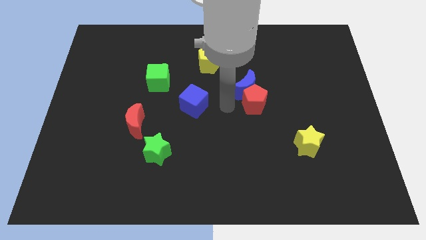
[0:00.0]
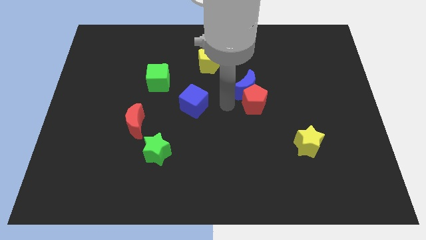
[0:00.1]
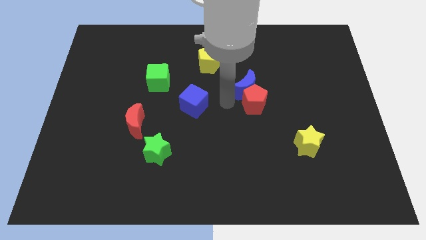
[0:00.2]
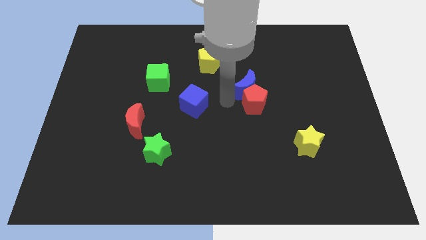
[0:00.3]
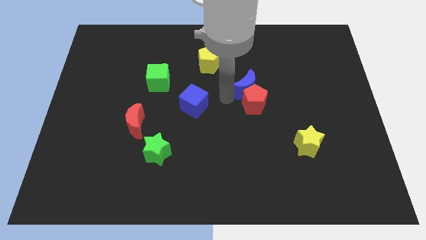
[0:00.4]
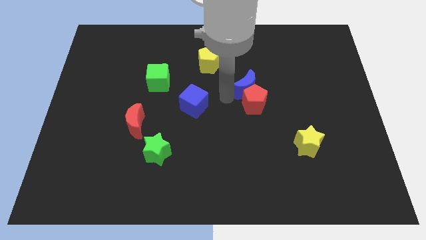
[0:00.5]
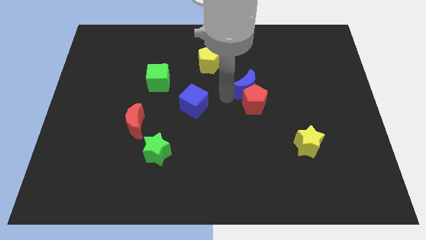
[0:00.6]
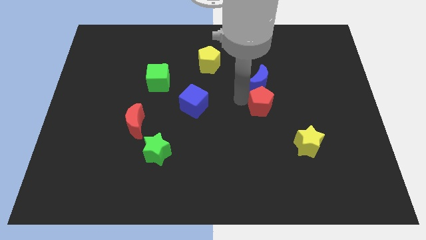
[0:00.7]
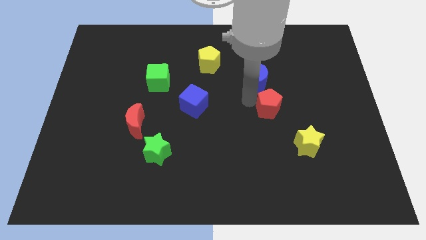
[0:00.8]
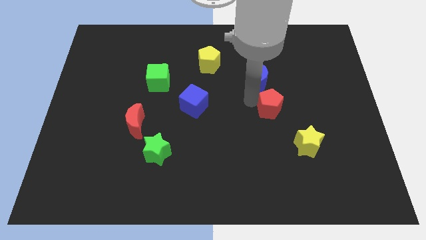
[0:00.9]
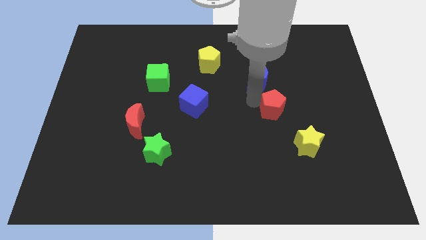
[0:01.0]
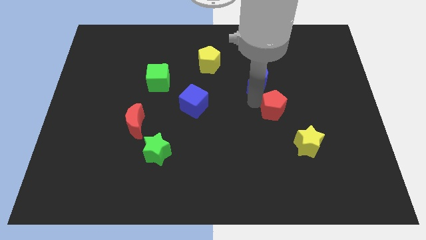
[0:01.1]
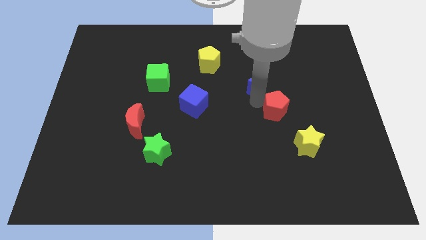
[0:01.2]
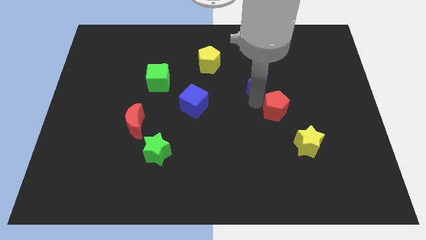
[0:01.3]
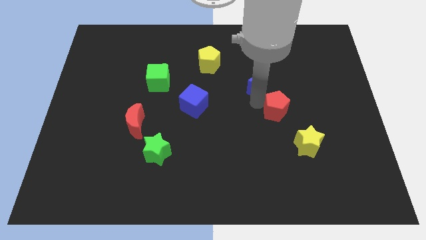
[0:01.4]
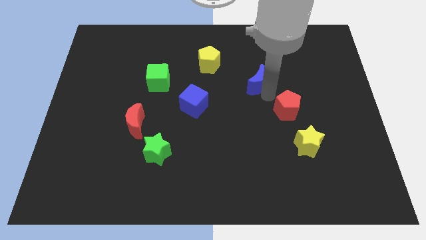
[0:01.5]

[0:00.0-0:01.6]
separate the red pentagon from the blue crescent

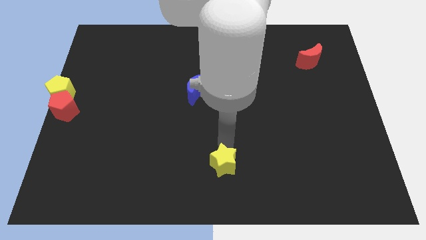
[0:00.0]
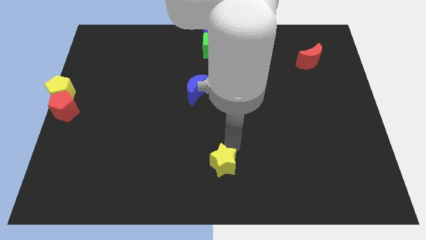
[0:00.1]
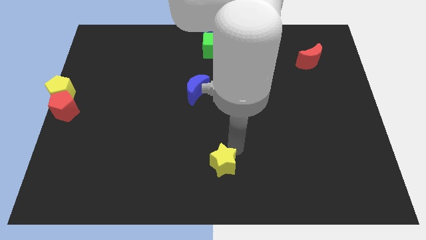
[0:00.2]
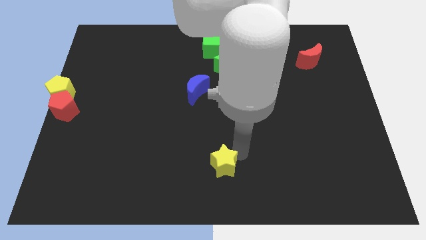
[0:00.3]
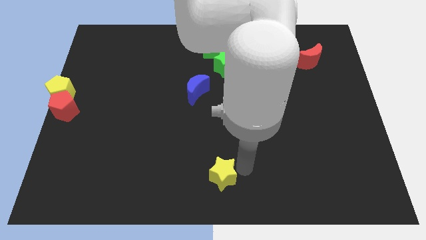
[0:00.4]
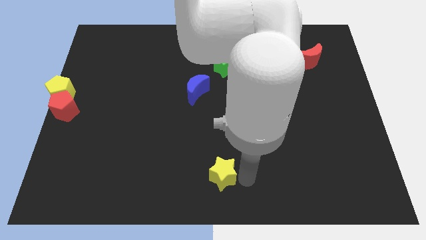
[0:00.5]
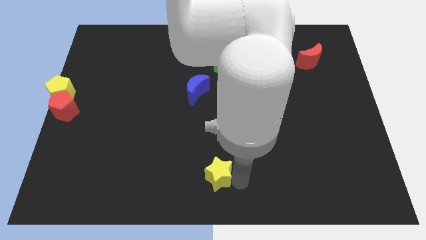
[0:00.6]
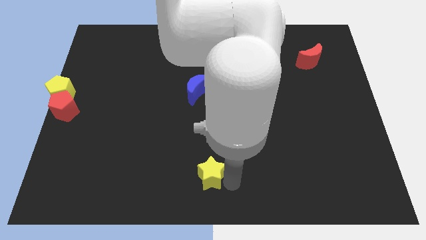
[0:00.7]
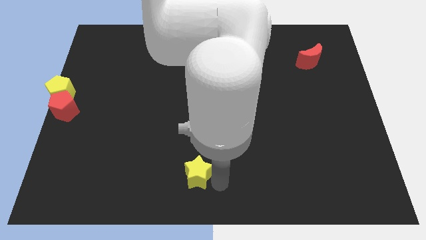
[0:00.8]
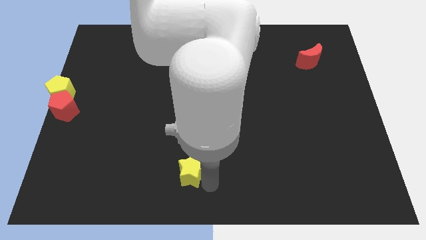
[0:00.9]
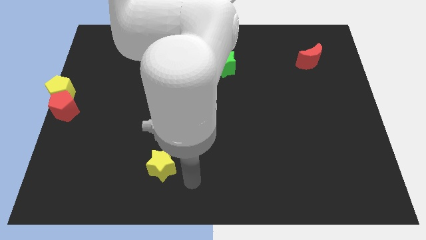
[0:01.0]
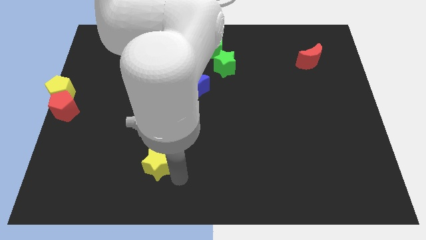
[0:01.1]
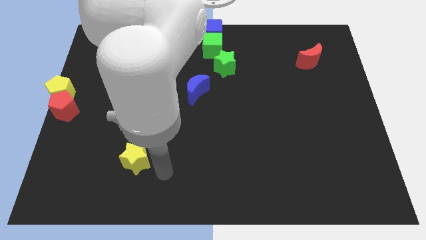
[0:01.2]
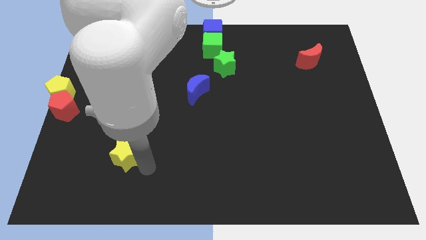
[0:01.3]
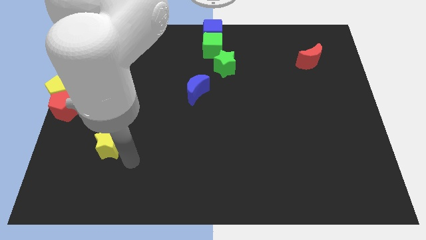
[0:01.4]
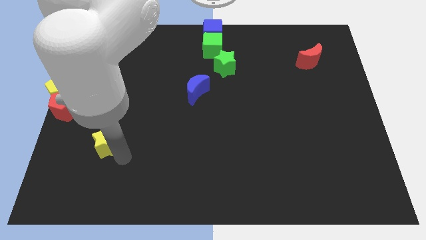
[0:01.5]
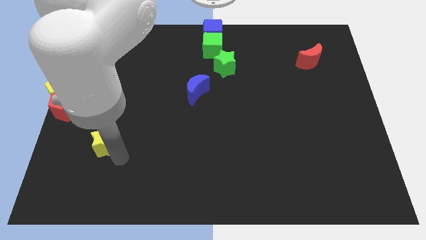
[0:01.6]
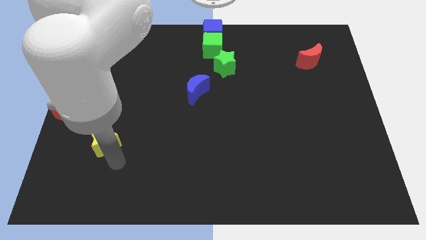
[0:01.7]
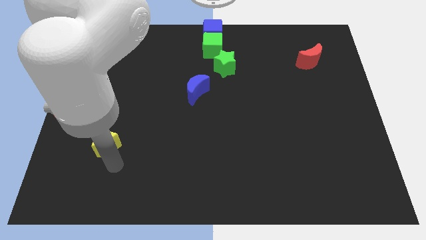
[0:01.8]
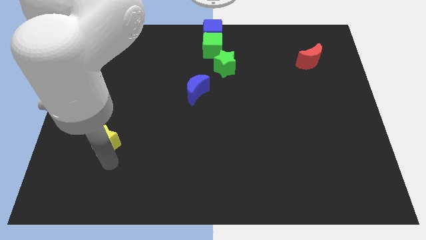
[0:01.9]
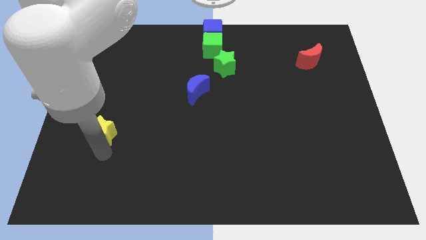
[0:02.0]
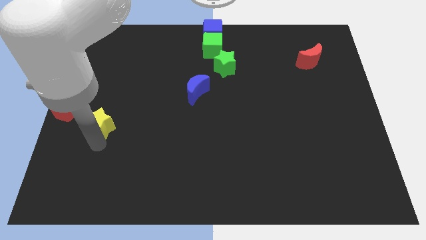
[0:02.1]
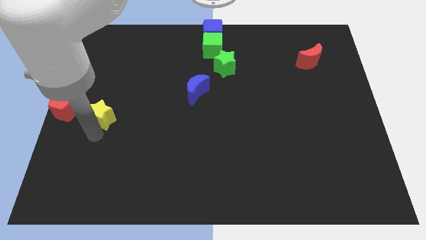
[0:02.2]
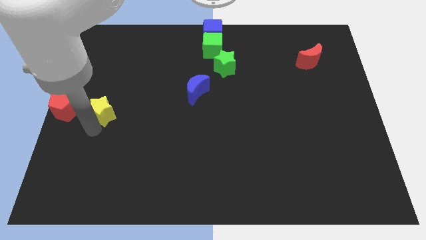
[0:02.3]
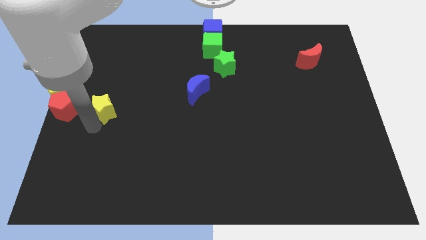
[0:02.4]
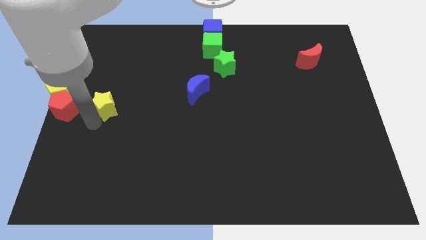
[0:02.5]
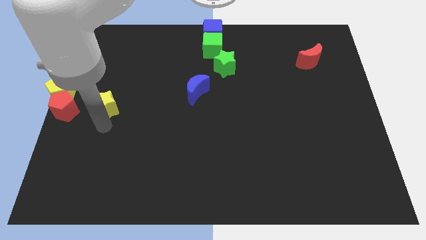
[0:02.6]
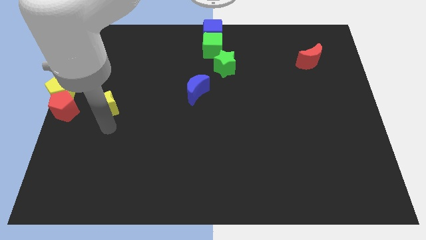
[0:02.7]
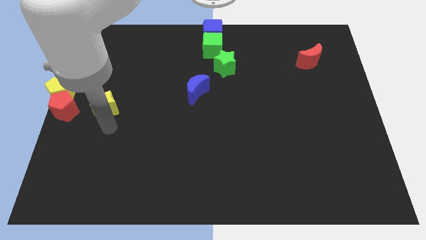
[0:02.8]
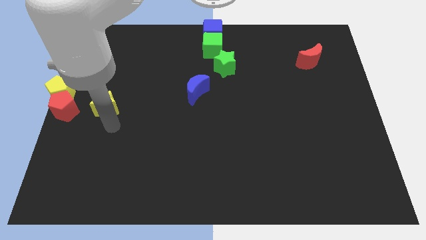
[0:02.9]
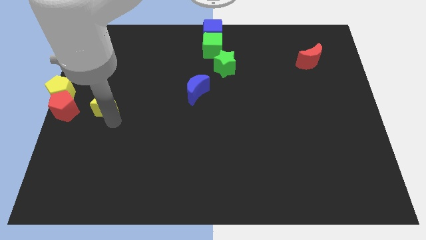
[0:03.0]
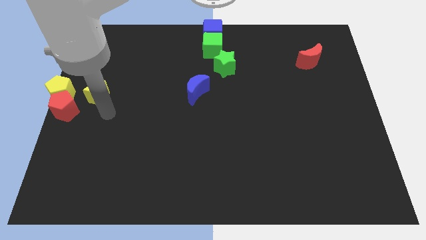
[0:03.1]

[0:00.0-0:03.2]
move the yellow star towards the left center of the board

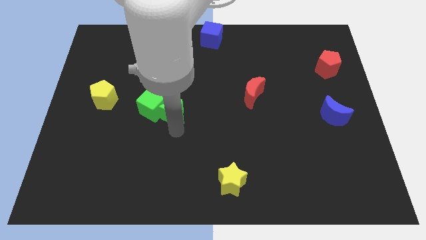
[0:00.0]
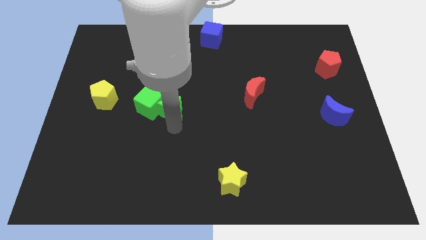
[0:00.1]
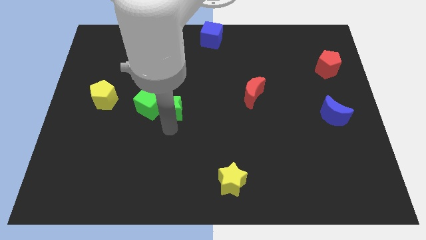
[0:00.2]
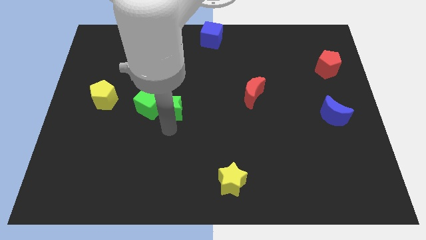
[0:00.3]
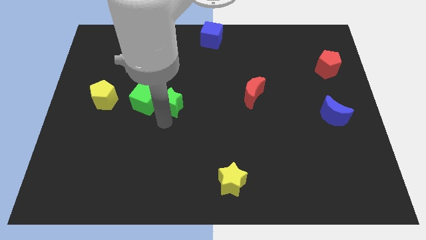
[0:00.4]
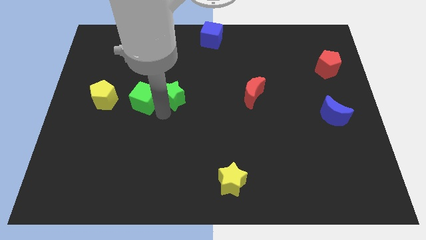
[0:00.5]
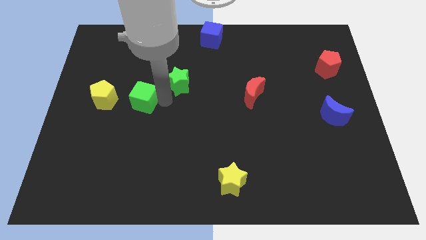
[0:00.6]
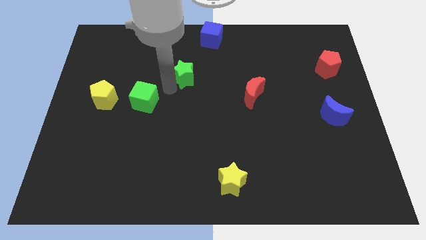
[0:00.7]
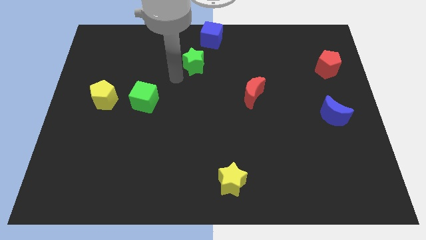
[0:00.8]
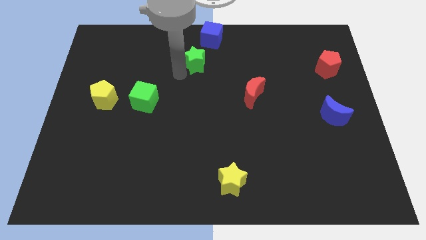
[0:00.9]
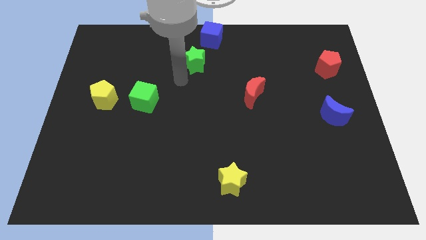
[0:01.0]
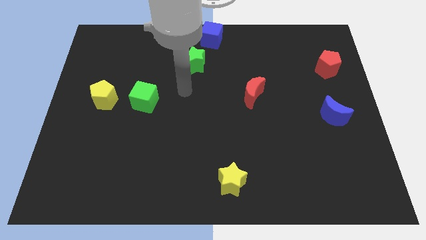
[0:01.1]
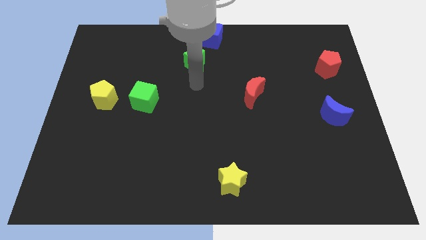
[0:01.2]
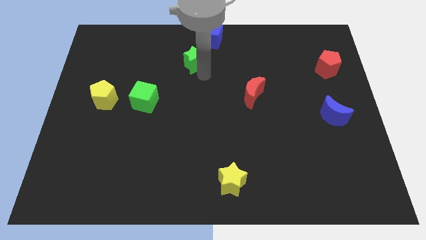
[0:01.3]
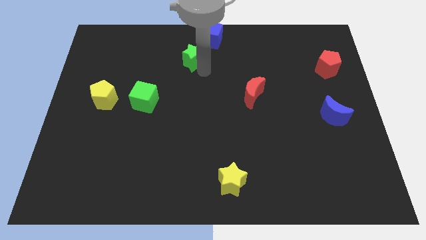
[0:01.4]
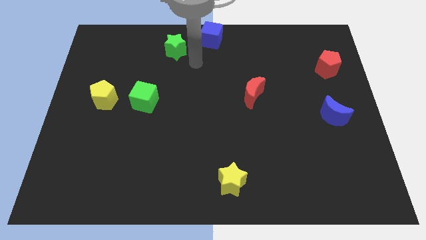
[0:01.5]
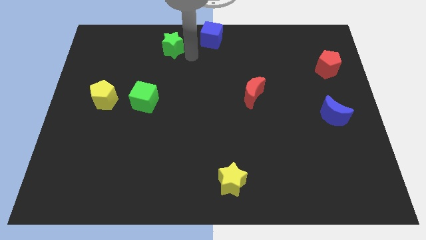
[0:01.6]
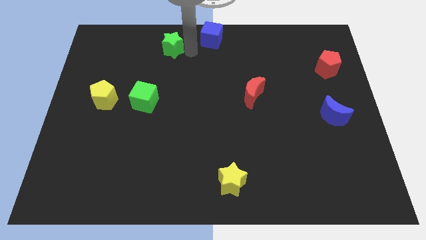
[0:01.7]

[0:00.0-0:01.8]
separate green star and the green cube

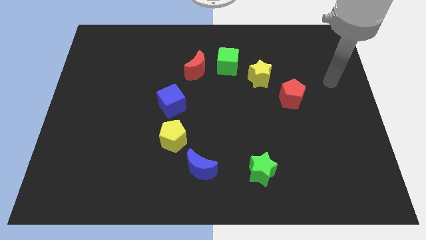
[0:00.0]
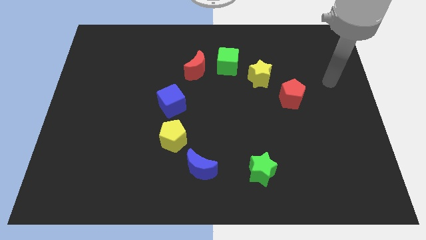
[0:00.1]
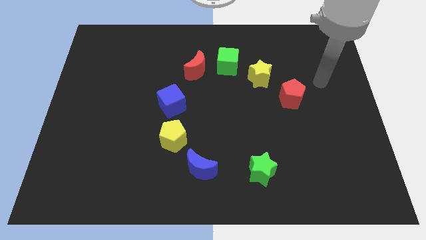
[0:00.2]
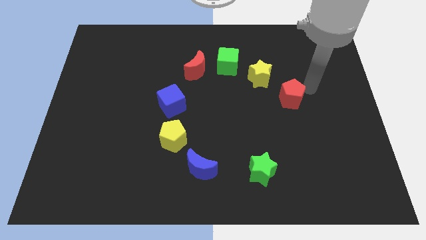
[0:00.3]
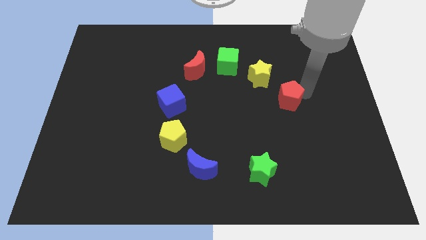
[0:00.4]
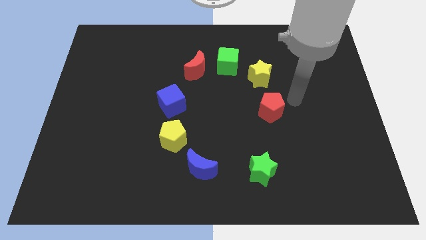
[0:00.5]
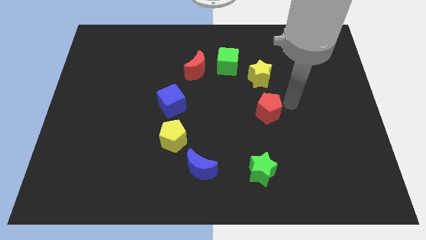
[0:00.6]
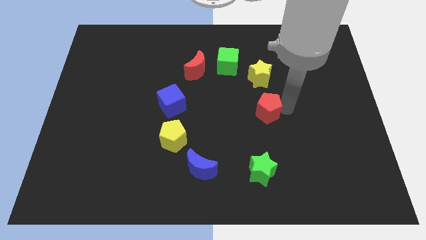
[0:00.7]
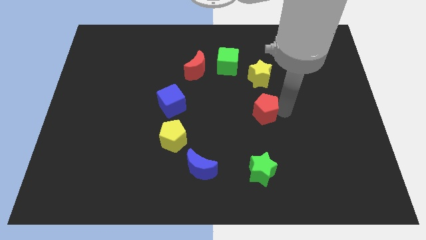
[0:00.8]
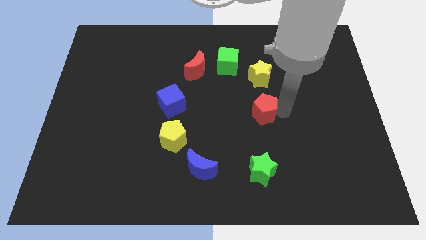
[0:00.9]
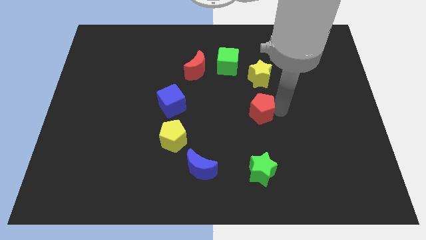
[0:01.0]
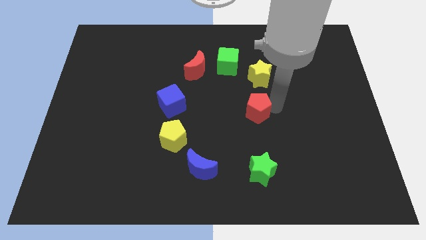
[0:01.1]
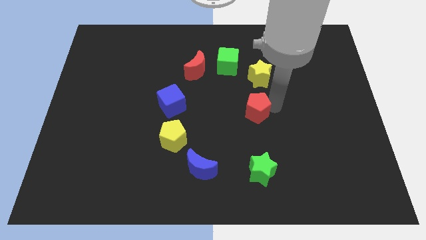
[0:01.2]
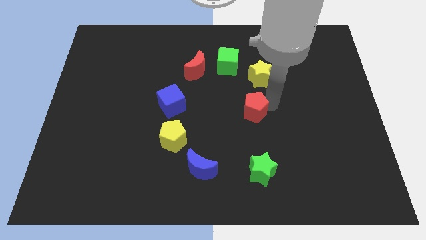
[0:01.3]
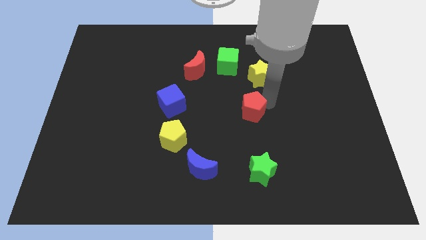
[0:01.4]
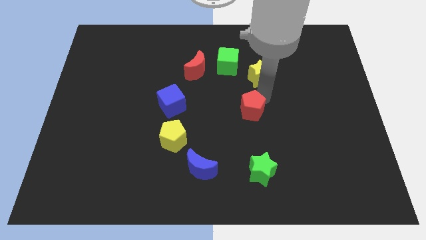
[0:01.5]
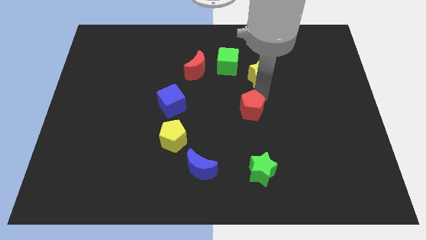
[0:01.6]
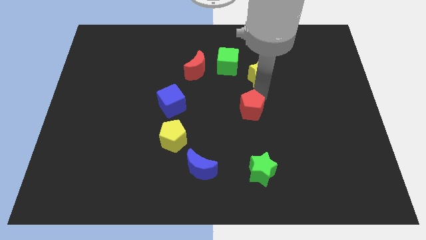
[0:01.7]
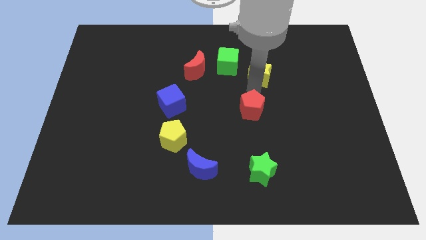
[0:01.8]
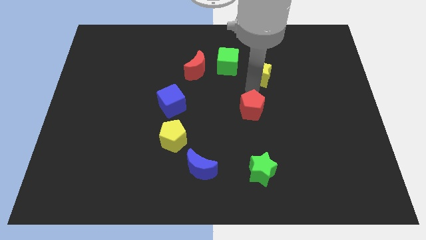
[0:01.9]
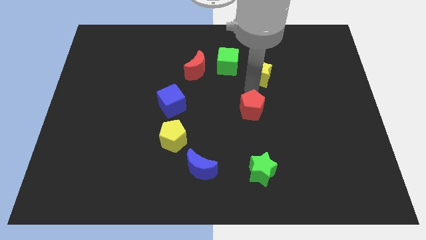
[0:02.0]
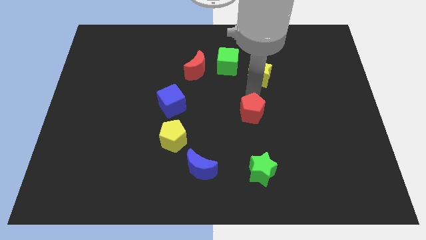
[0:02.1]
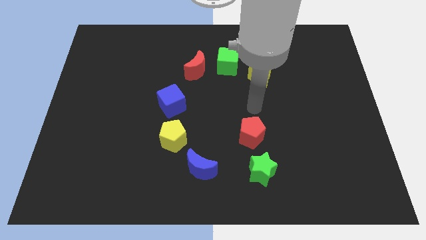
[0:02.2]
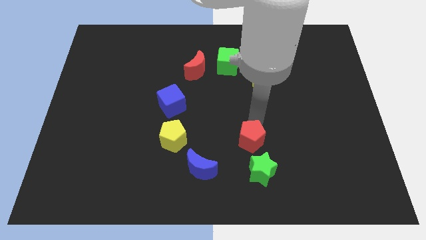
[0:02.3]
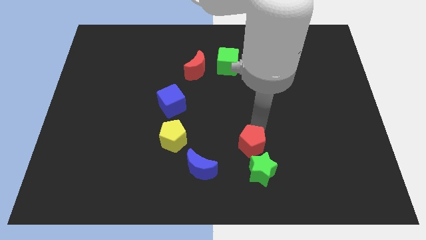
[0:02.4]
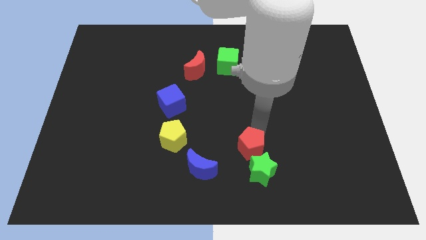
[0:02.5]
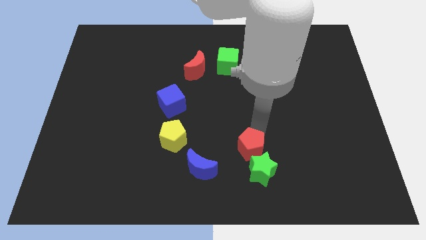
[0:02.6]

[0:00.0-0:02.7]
place red pentagon towards green star
